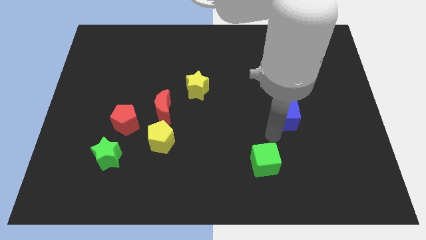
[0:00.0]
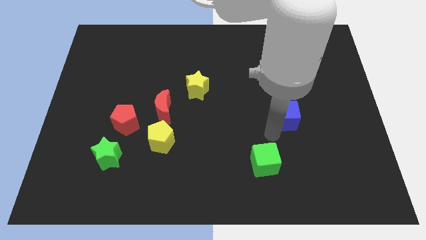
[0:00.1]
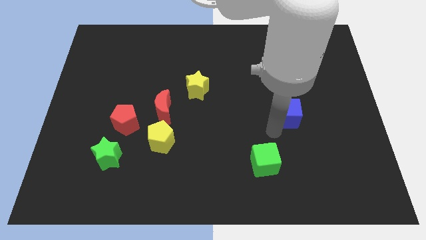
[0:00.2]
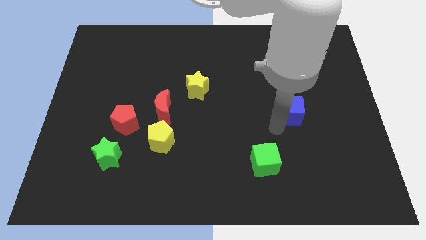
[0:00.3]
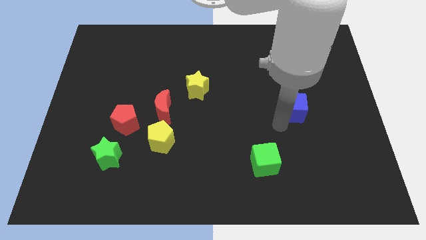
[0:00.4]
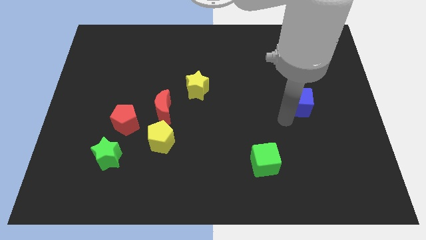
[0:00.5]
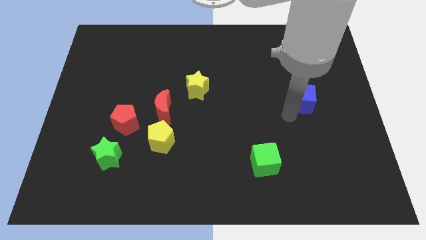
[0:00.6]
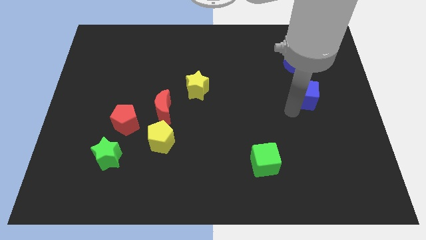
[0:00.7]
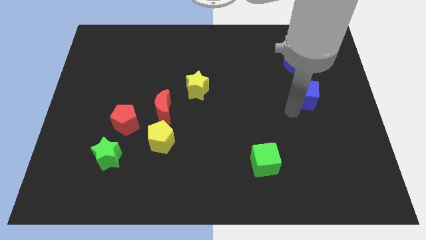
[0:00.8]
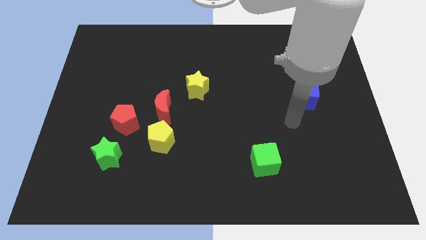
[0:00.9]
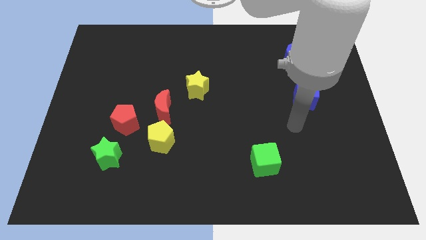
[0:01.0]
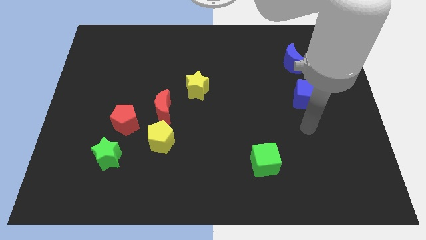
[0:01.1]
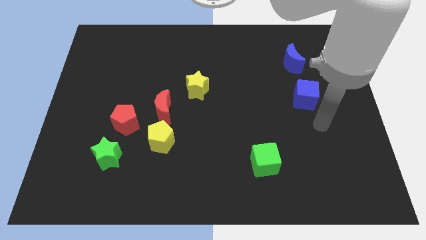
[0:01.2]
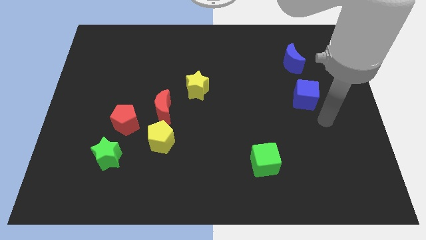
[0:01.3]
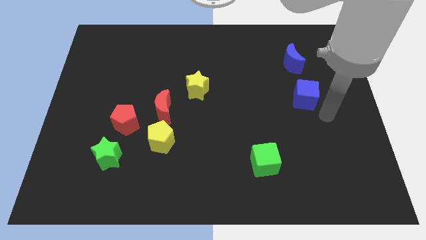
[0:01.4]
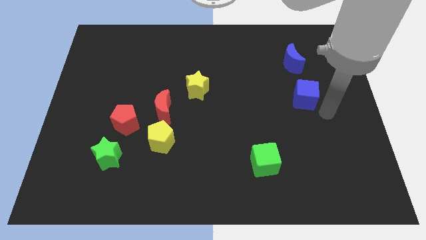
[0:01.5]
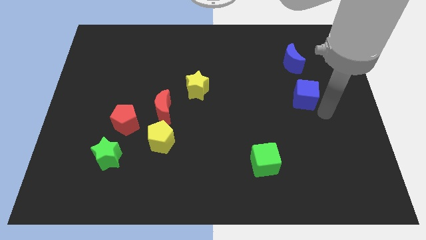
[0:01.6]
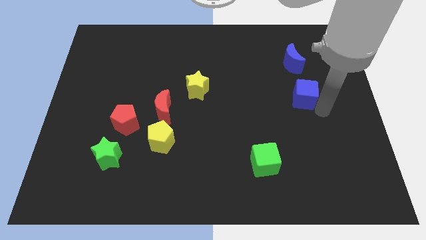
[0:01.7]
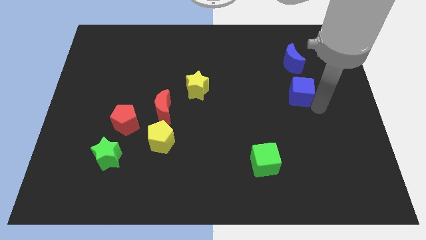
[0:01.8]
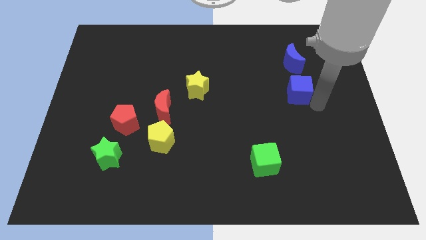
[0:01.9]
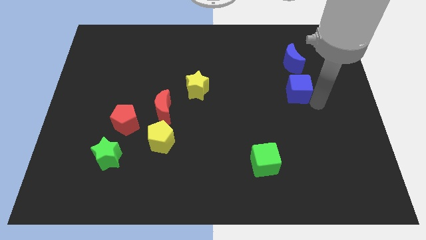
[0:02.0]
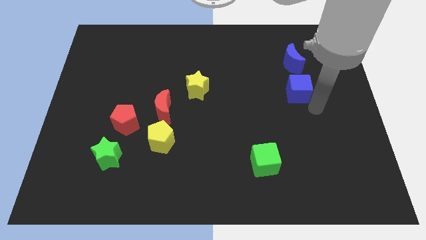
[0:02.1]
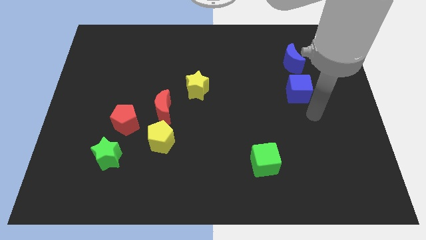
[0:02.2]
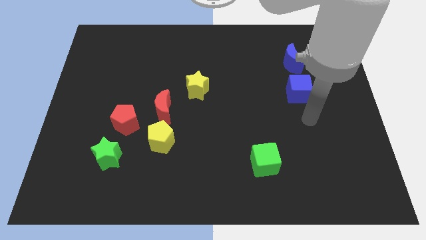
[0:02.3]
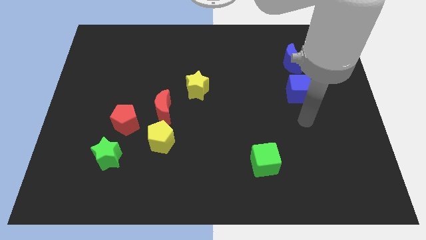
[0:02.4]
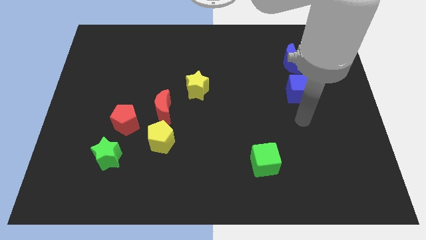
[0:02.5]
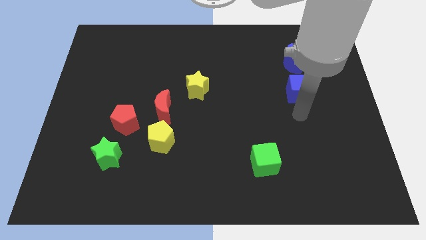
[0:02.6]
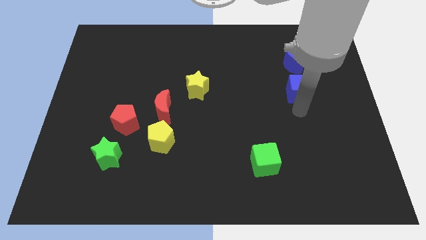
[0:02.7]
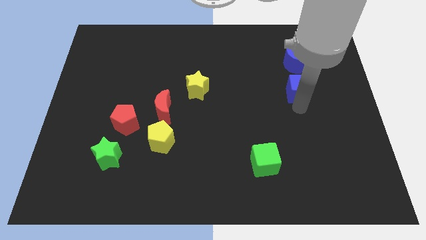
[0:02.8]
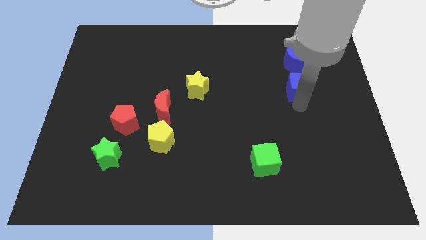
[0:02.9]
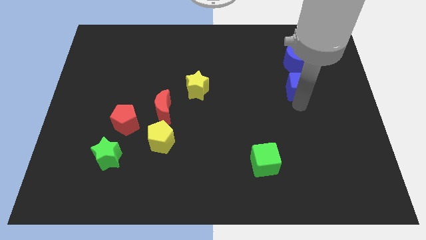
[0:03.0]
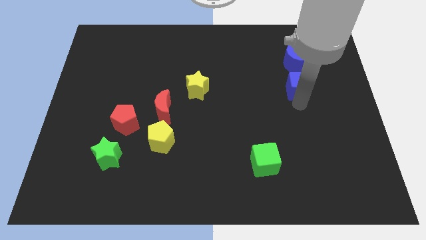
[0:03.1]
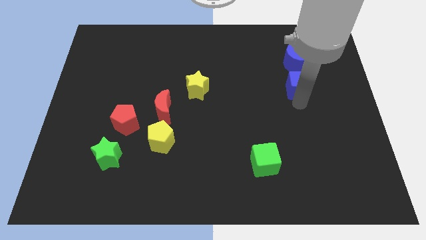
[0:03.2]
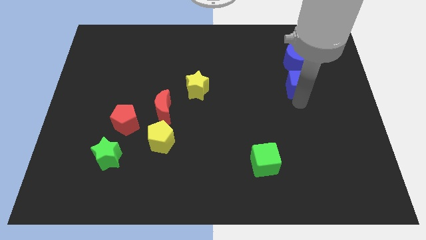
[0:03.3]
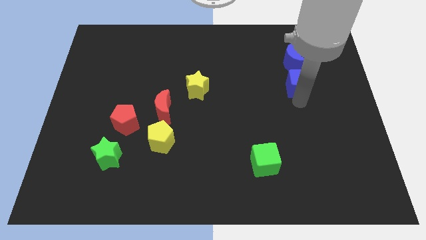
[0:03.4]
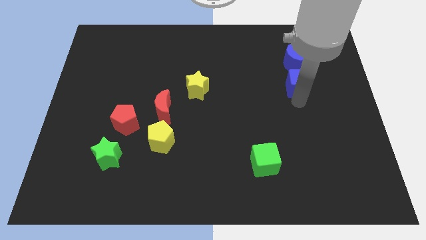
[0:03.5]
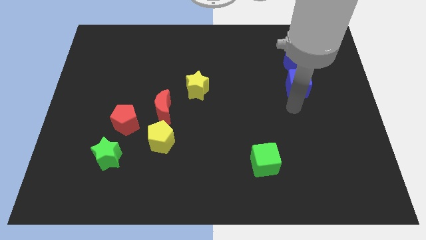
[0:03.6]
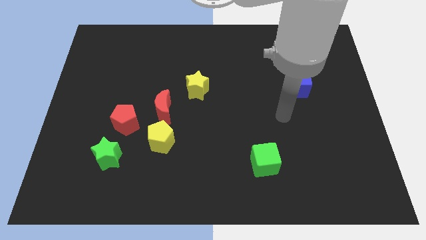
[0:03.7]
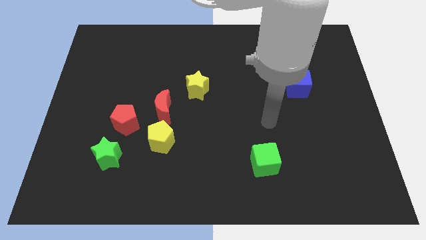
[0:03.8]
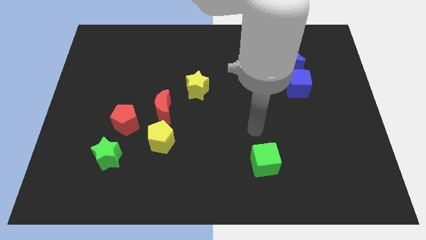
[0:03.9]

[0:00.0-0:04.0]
push the blue cube to the bottom side of the blue crescent

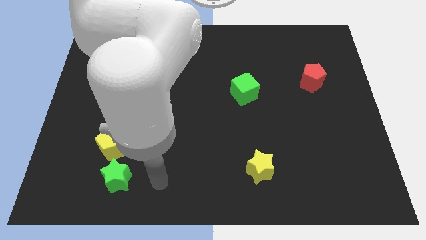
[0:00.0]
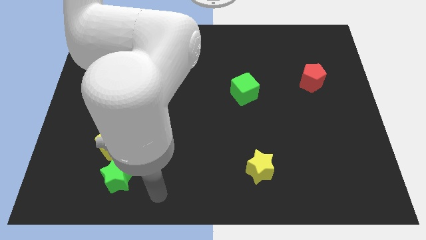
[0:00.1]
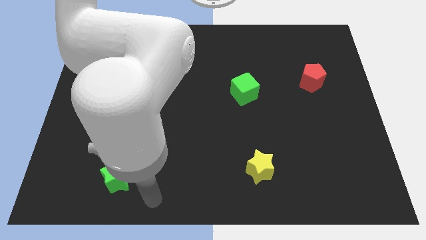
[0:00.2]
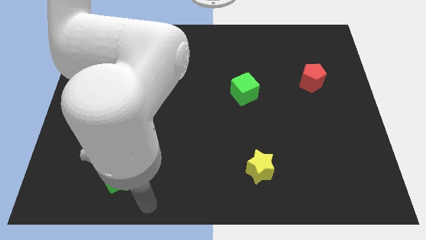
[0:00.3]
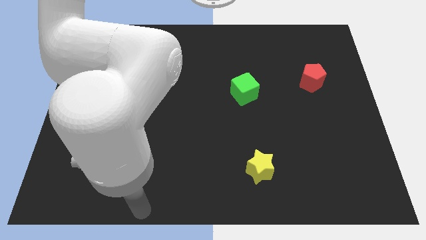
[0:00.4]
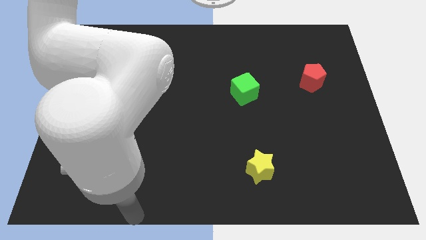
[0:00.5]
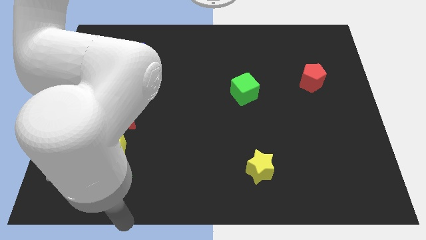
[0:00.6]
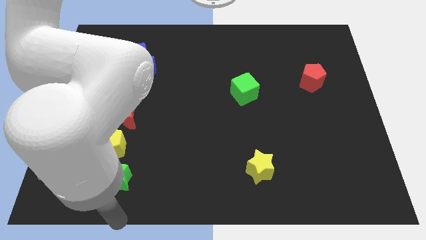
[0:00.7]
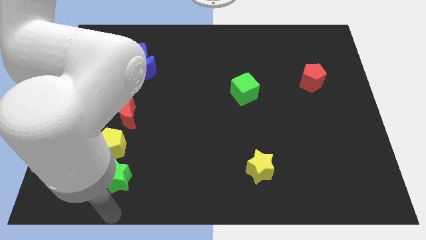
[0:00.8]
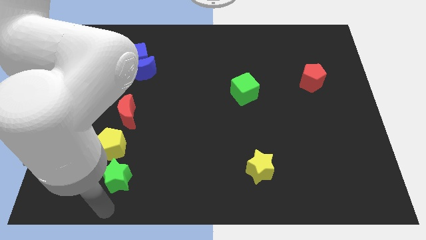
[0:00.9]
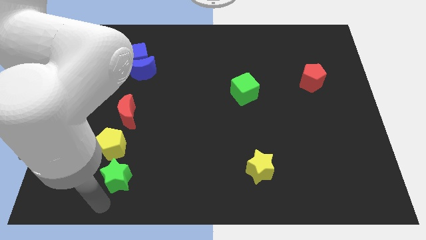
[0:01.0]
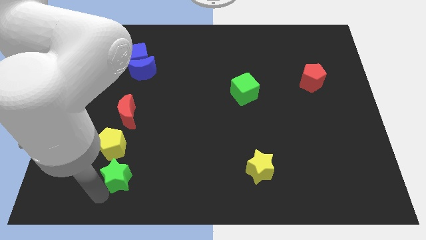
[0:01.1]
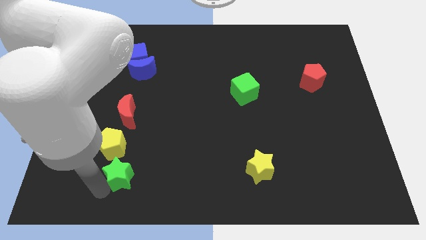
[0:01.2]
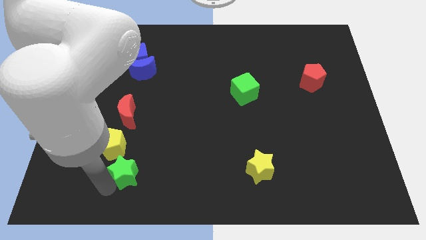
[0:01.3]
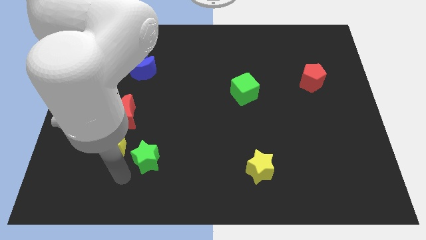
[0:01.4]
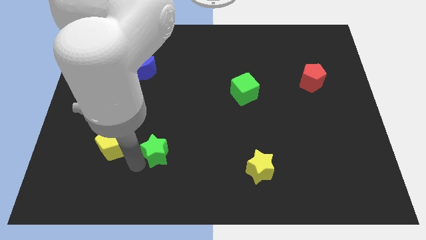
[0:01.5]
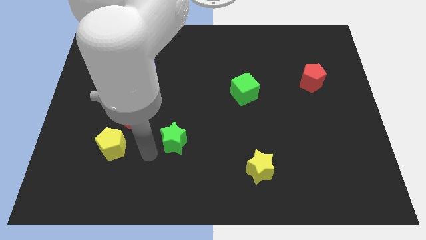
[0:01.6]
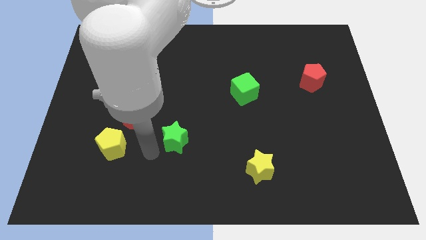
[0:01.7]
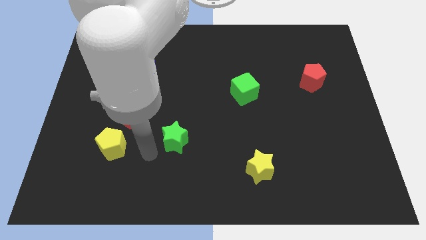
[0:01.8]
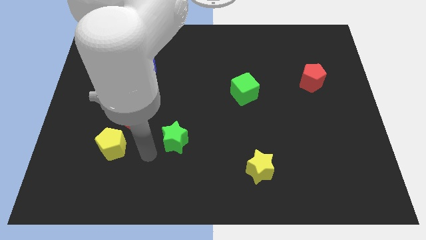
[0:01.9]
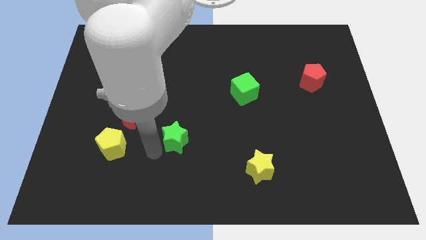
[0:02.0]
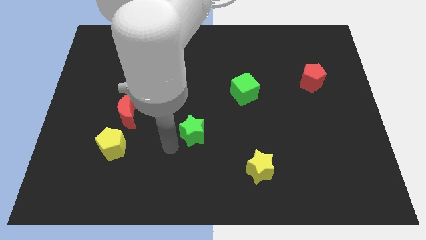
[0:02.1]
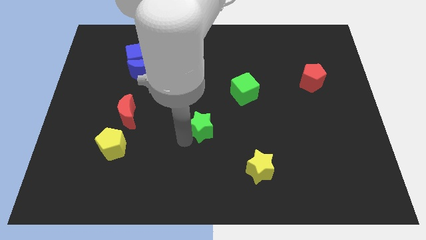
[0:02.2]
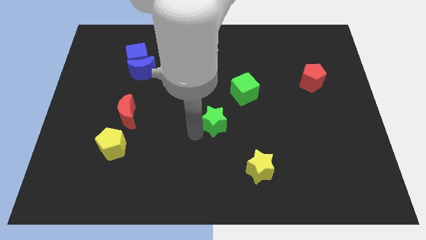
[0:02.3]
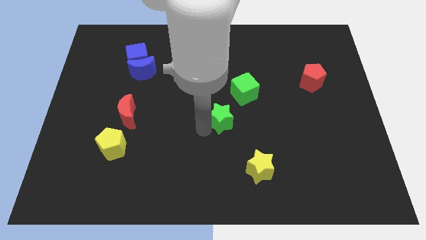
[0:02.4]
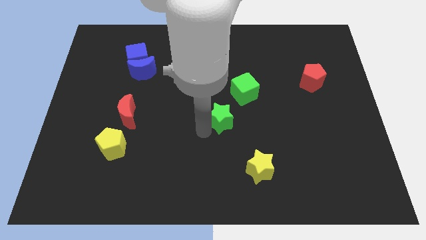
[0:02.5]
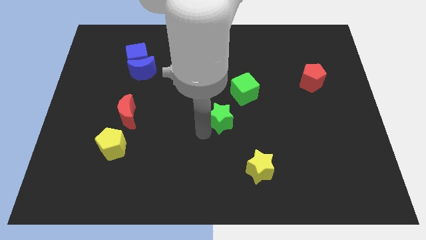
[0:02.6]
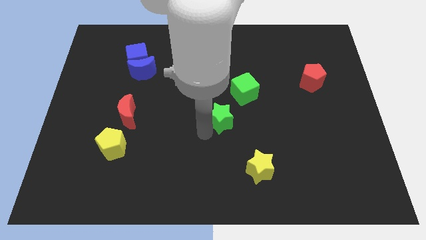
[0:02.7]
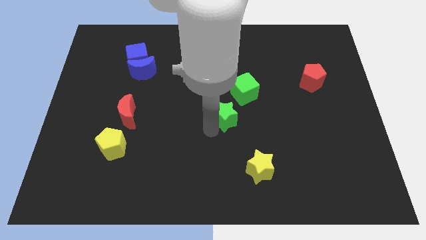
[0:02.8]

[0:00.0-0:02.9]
move the green star horizontally right of the red moon

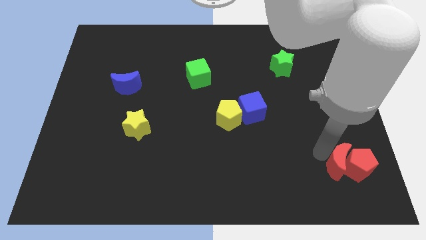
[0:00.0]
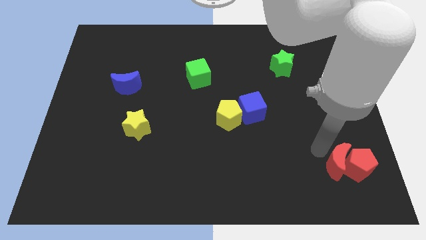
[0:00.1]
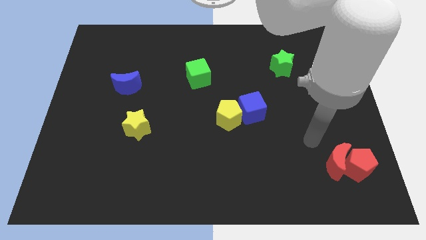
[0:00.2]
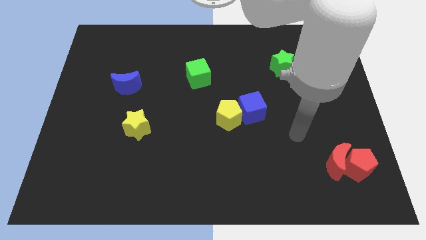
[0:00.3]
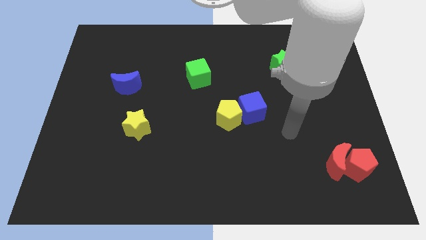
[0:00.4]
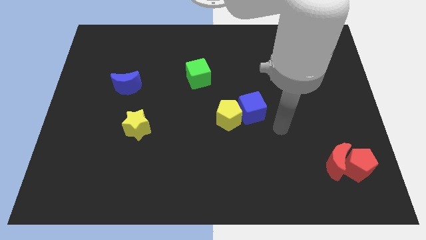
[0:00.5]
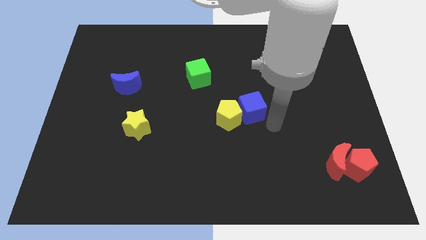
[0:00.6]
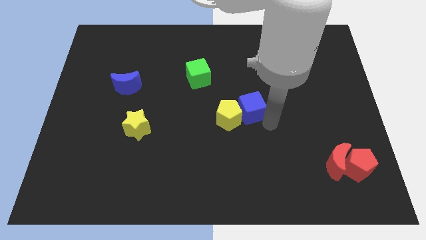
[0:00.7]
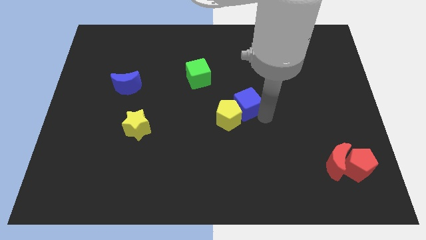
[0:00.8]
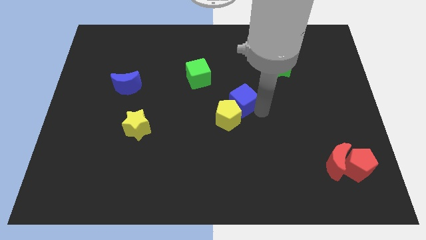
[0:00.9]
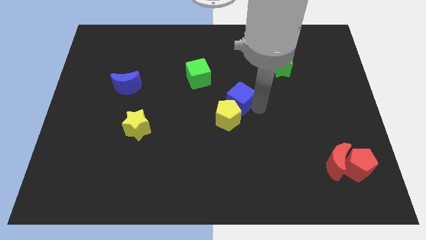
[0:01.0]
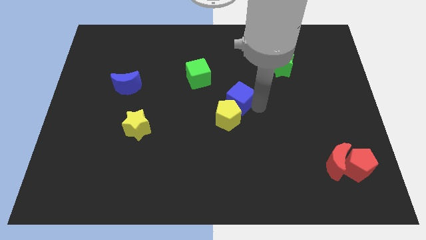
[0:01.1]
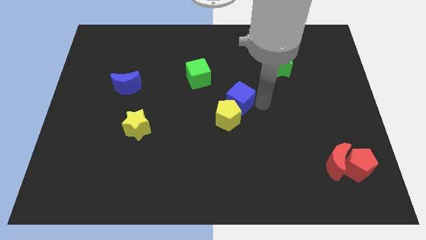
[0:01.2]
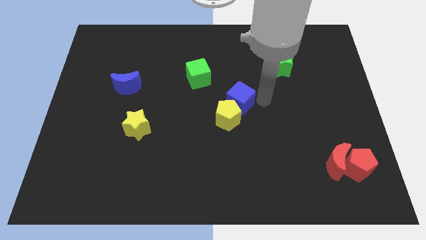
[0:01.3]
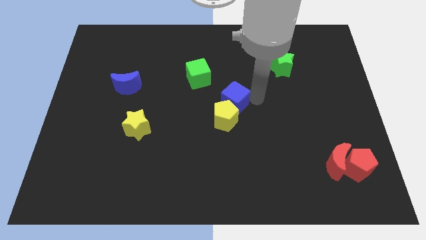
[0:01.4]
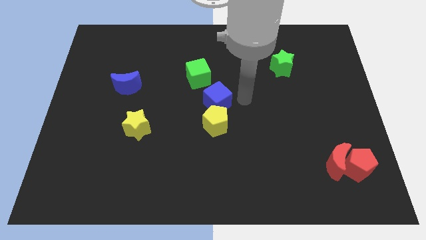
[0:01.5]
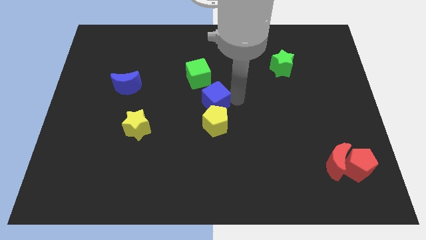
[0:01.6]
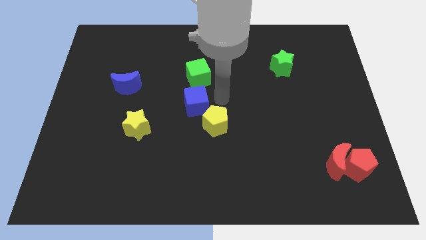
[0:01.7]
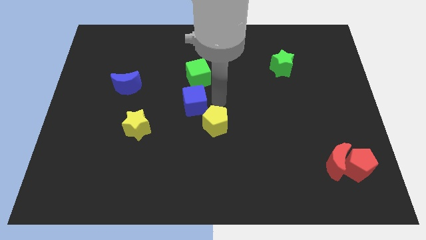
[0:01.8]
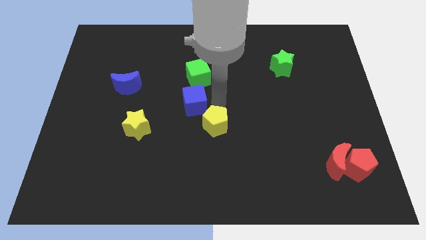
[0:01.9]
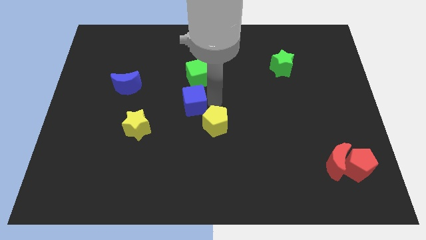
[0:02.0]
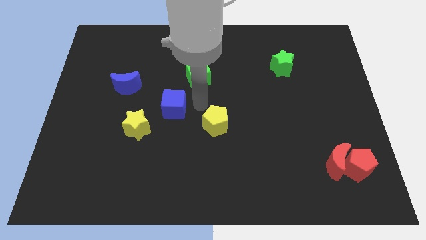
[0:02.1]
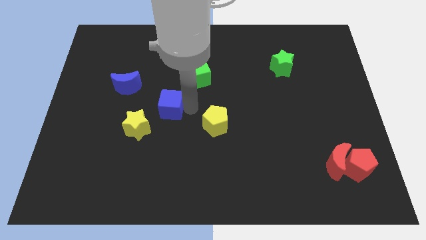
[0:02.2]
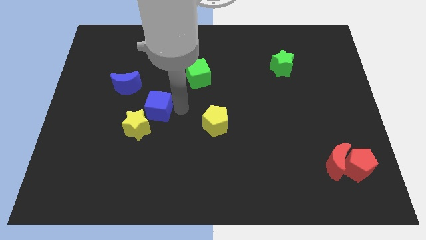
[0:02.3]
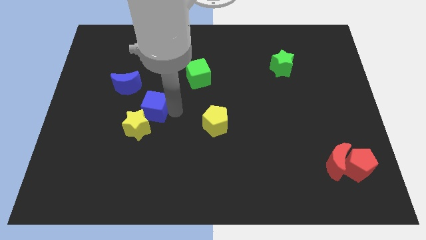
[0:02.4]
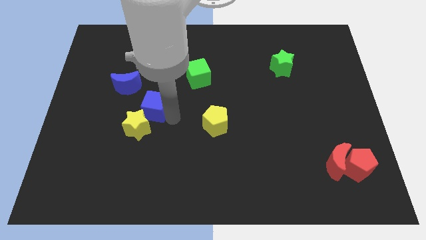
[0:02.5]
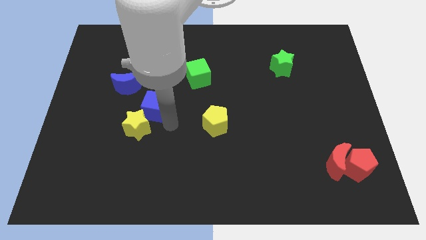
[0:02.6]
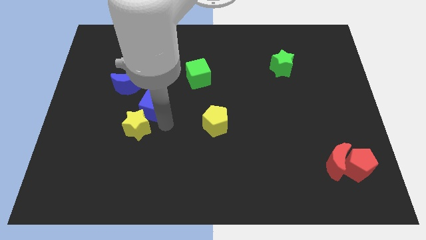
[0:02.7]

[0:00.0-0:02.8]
push the blue cube to the top right of the yellow star
